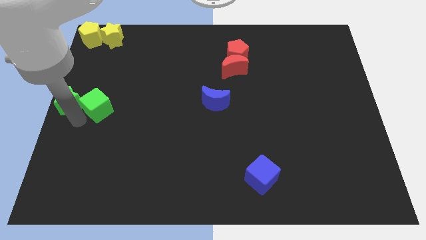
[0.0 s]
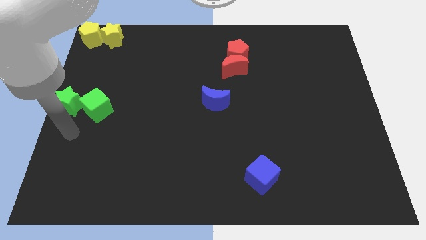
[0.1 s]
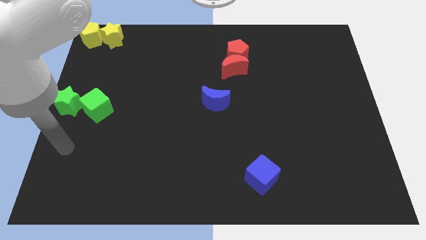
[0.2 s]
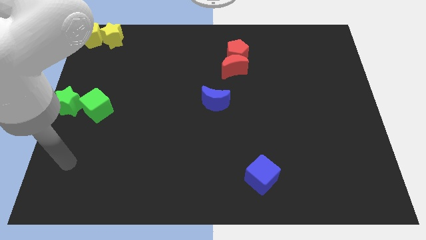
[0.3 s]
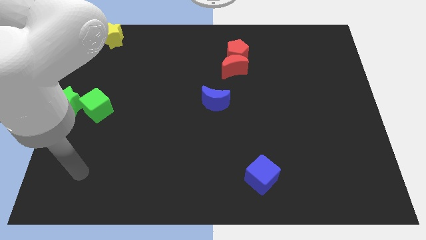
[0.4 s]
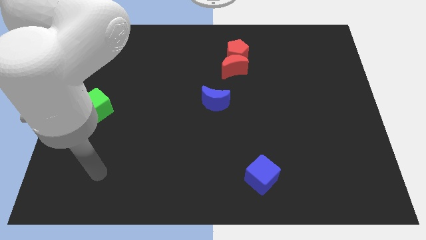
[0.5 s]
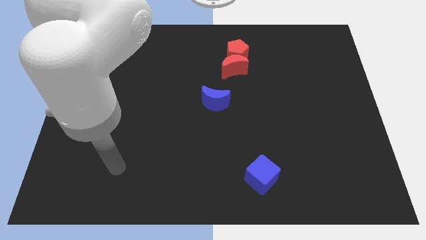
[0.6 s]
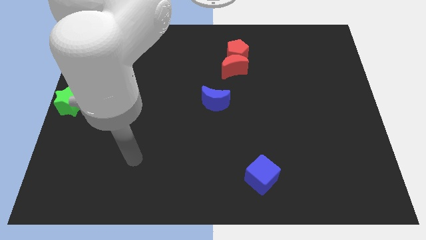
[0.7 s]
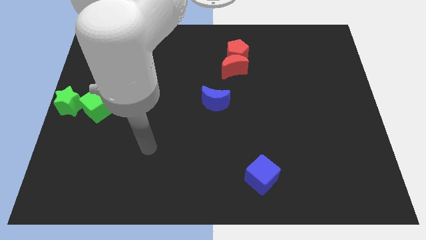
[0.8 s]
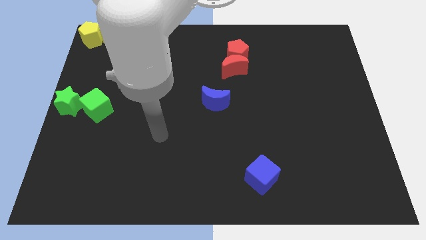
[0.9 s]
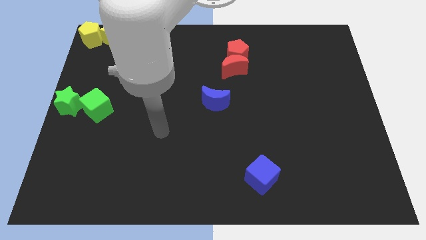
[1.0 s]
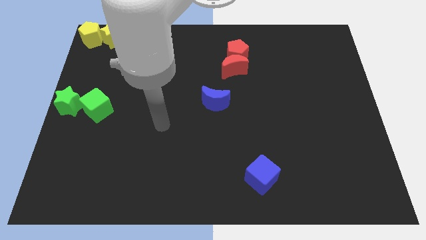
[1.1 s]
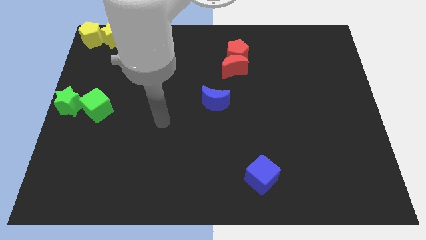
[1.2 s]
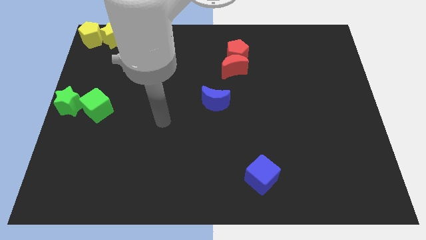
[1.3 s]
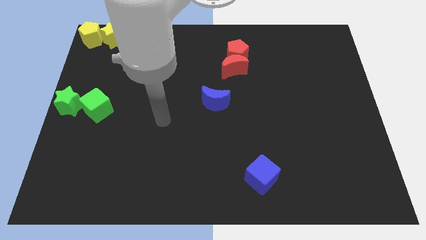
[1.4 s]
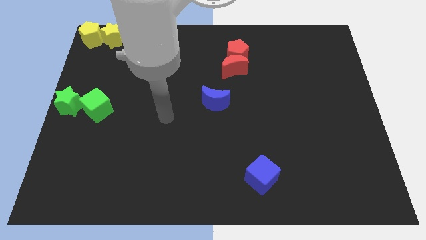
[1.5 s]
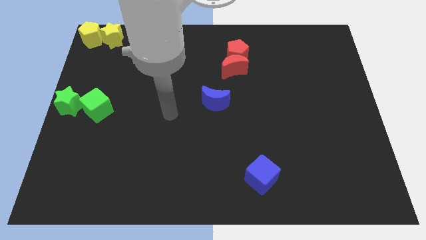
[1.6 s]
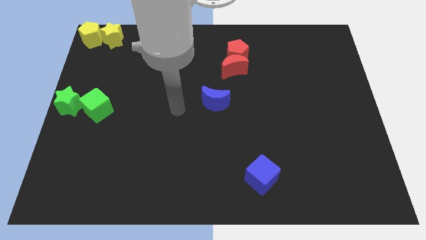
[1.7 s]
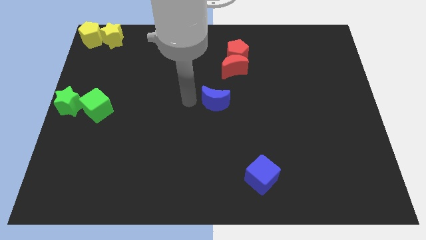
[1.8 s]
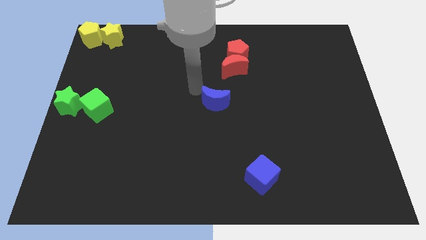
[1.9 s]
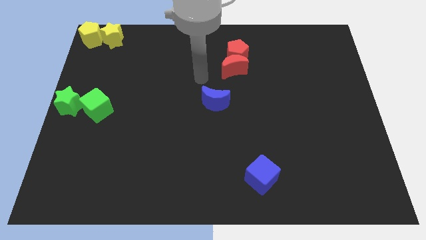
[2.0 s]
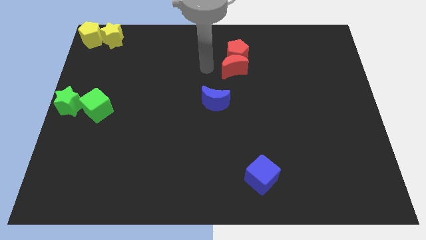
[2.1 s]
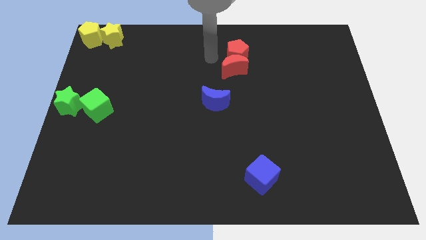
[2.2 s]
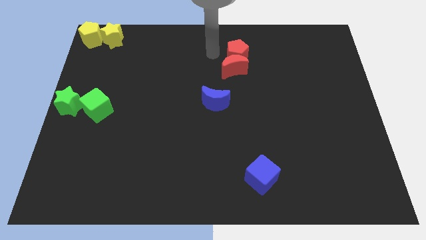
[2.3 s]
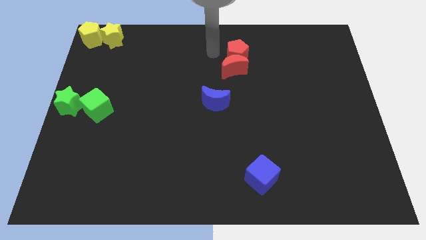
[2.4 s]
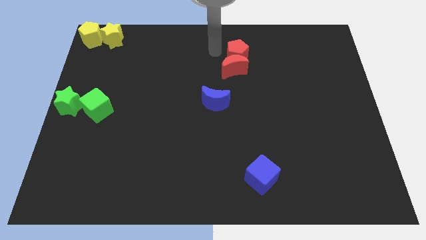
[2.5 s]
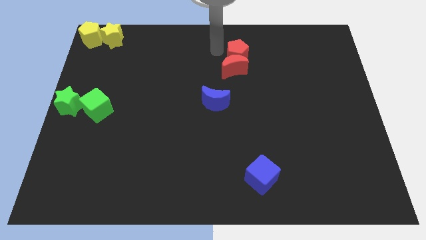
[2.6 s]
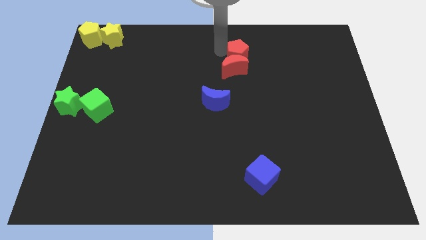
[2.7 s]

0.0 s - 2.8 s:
move your arm away from the green cube

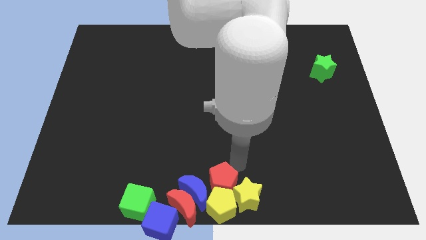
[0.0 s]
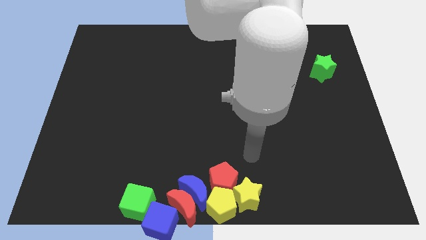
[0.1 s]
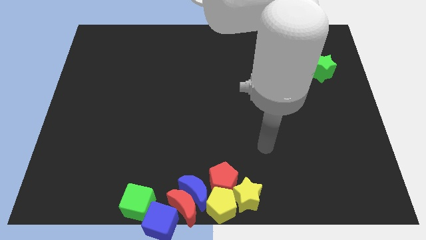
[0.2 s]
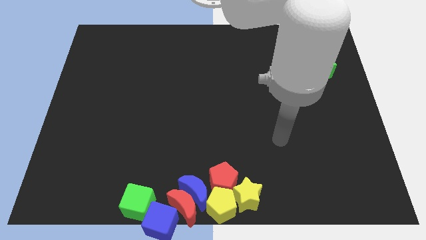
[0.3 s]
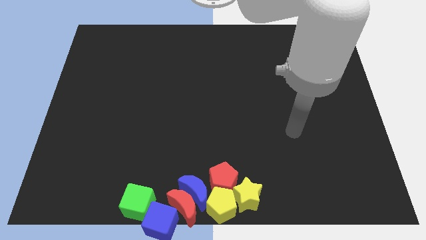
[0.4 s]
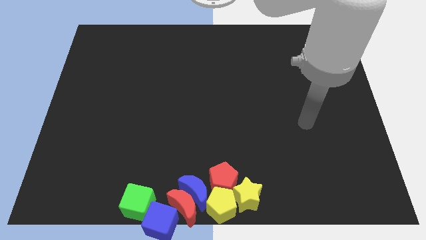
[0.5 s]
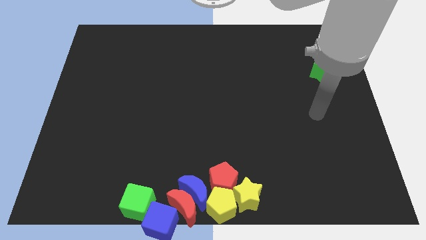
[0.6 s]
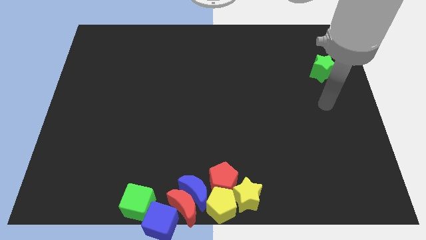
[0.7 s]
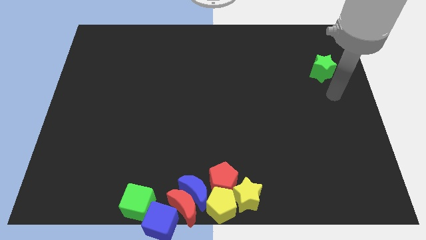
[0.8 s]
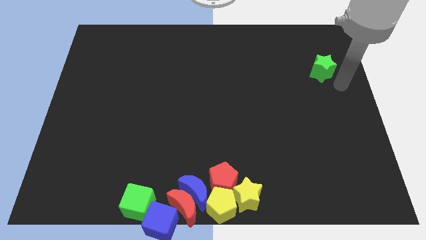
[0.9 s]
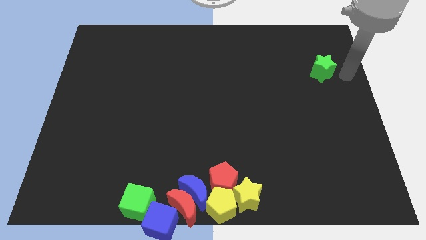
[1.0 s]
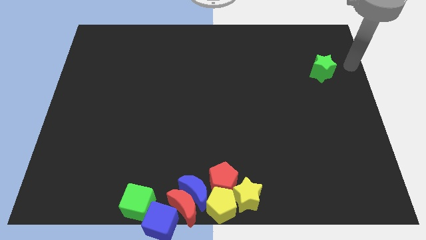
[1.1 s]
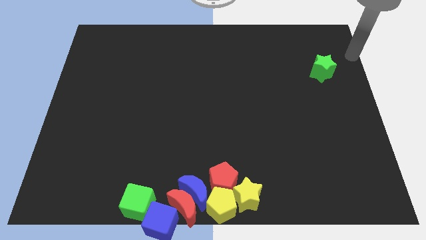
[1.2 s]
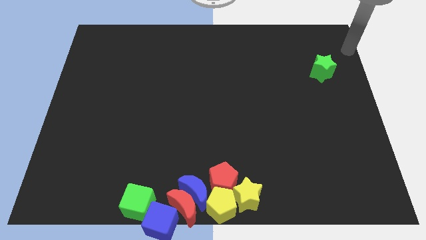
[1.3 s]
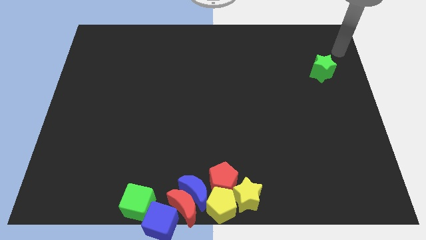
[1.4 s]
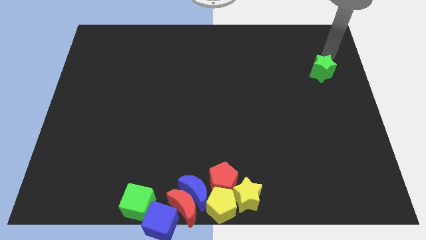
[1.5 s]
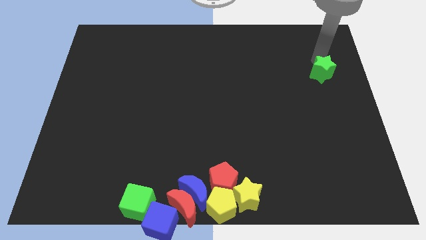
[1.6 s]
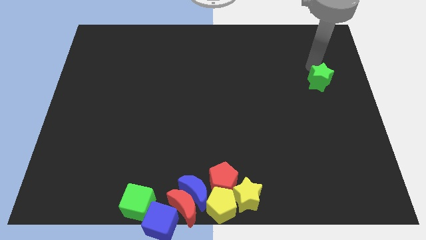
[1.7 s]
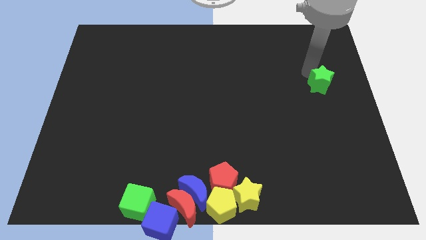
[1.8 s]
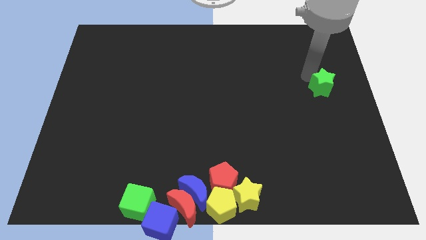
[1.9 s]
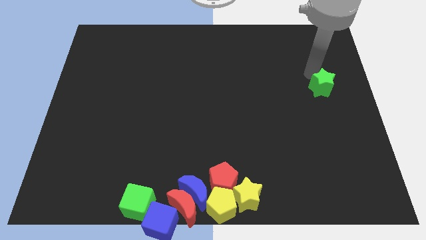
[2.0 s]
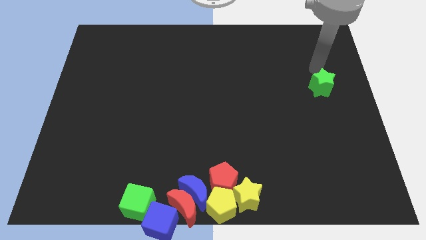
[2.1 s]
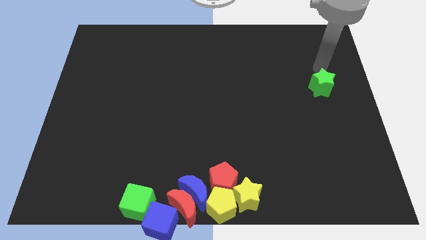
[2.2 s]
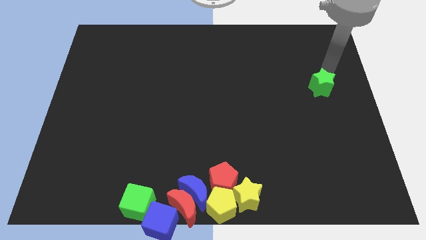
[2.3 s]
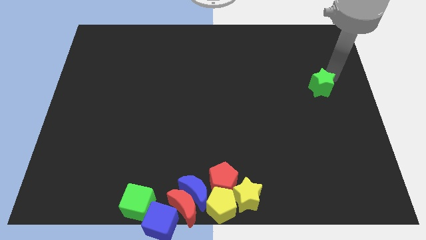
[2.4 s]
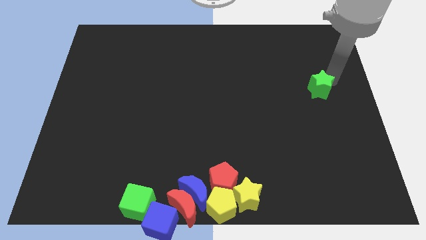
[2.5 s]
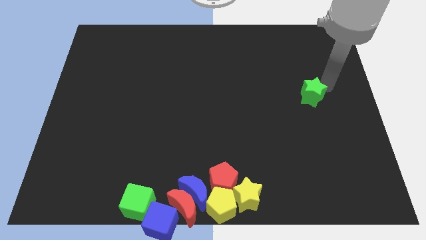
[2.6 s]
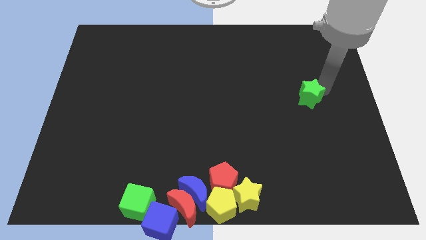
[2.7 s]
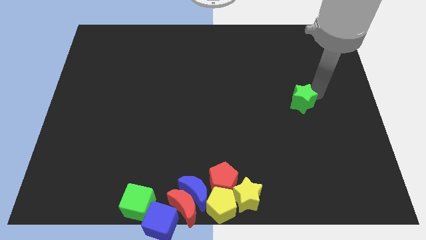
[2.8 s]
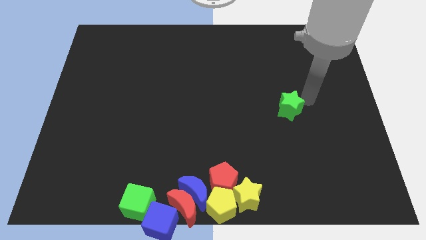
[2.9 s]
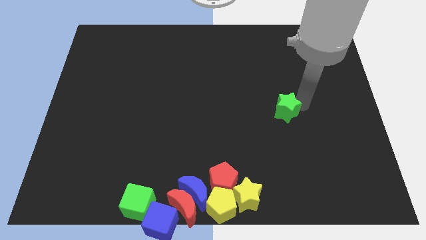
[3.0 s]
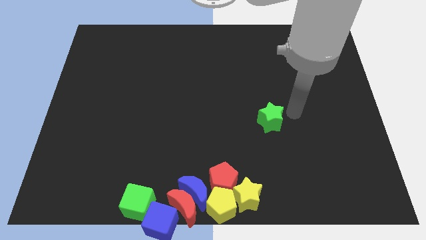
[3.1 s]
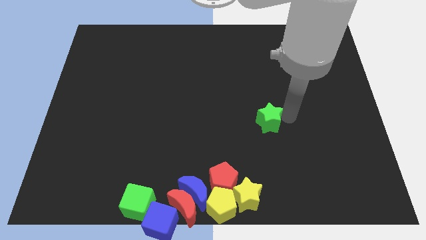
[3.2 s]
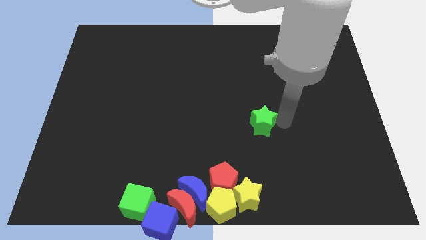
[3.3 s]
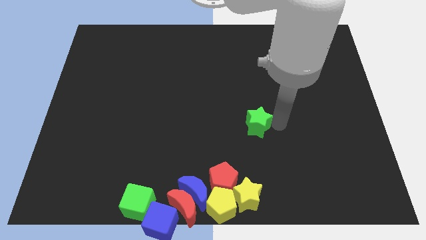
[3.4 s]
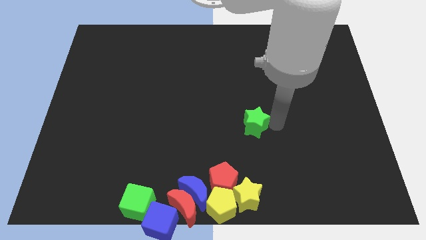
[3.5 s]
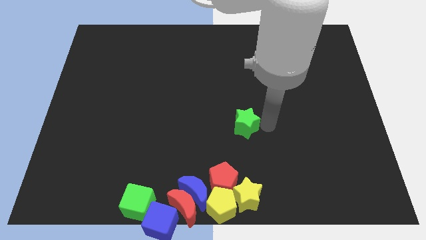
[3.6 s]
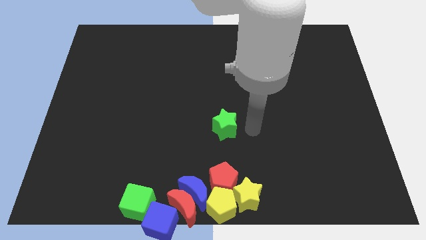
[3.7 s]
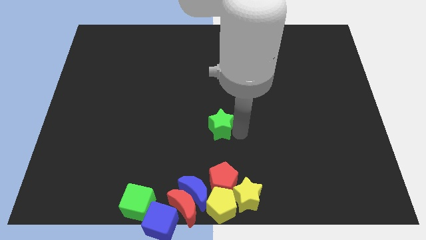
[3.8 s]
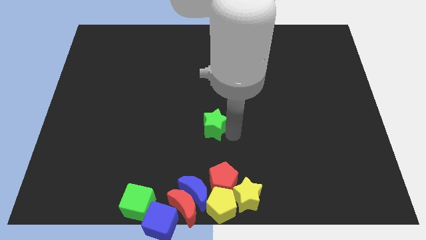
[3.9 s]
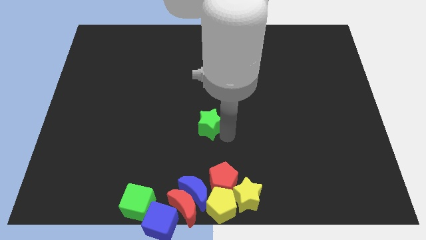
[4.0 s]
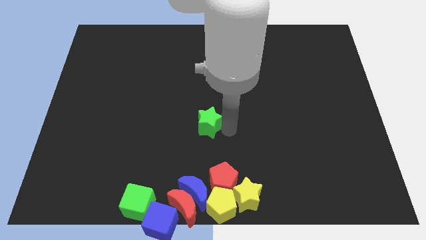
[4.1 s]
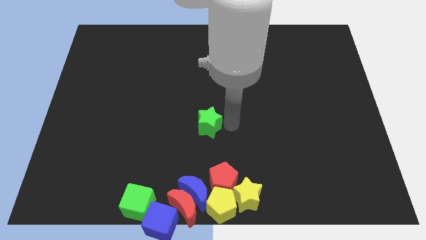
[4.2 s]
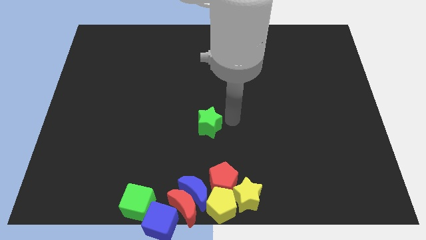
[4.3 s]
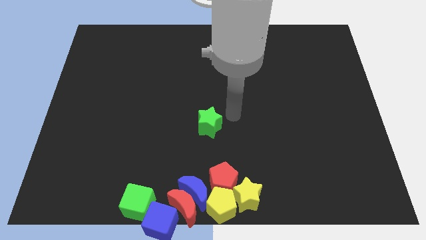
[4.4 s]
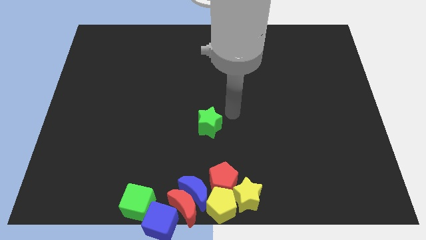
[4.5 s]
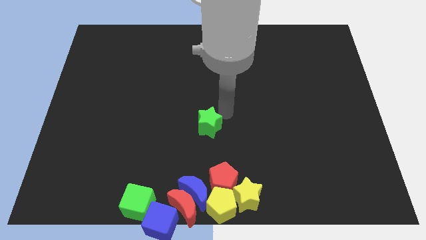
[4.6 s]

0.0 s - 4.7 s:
move the green star to the top side of the group of blocks

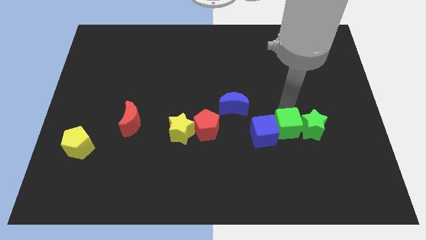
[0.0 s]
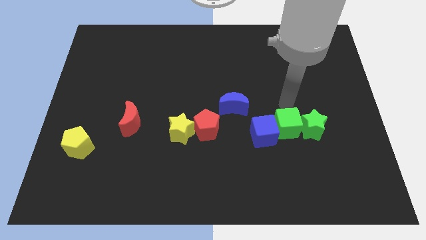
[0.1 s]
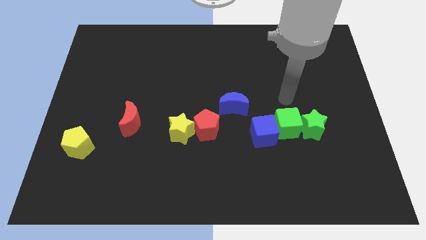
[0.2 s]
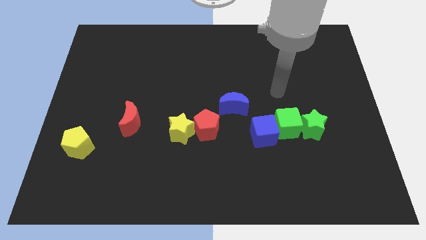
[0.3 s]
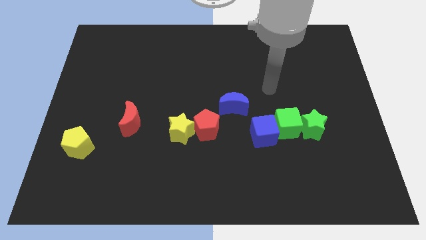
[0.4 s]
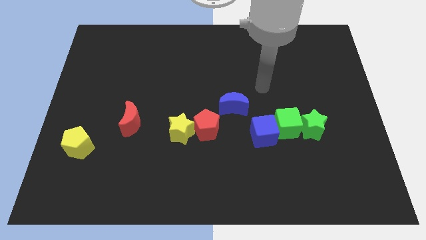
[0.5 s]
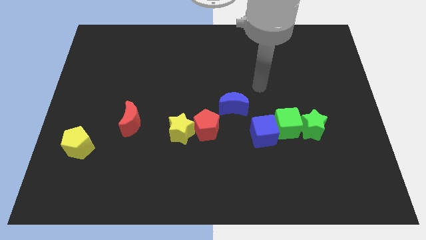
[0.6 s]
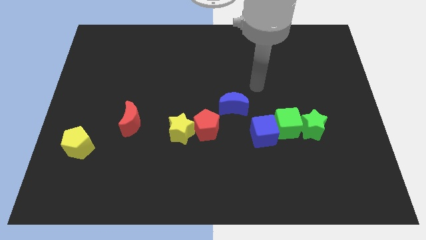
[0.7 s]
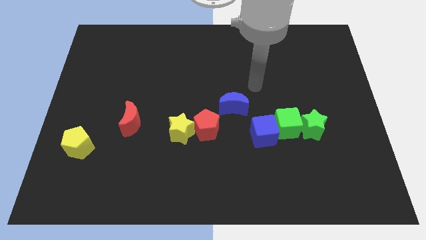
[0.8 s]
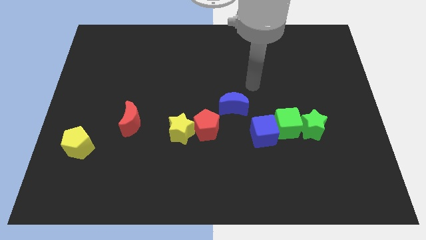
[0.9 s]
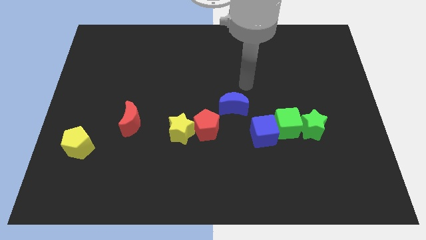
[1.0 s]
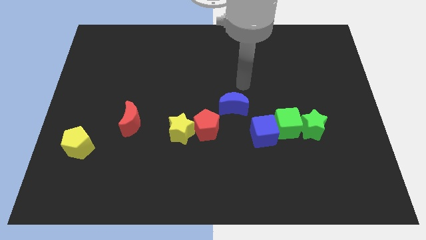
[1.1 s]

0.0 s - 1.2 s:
move the arm away from the green cube

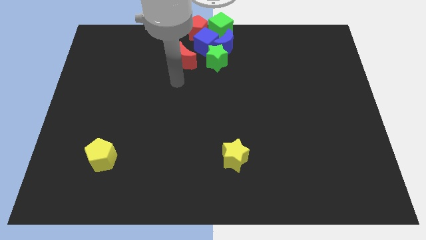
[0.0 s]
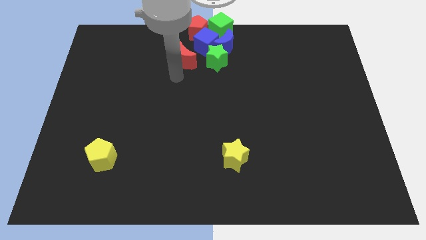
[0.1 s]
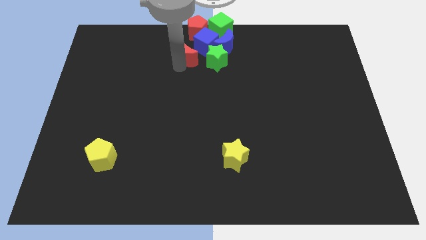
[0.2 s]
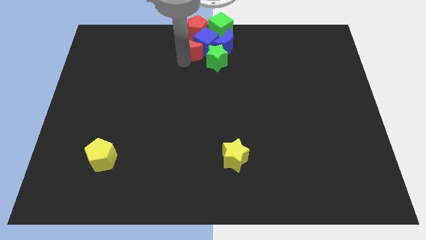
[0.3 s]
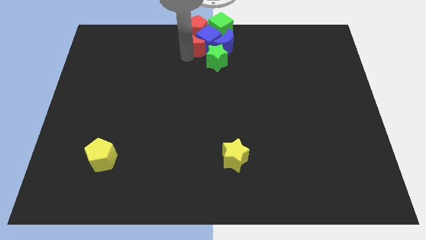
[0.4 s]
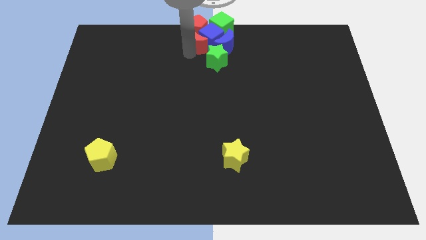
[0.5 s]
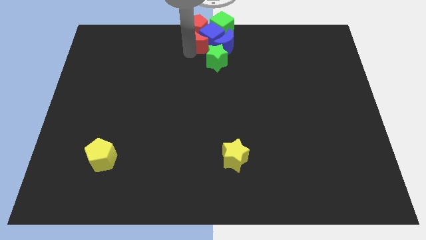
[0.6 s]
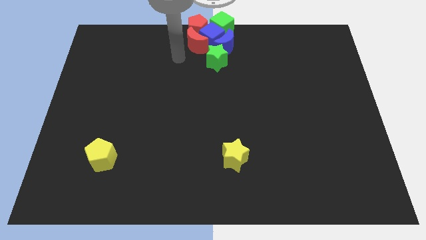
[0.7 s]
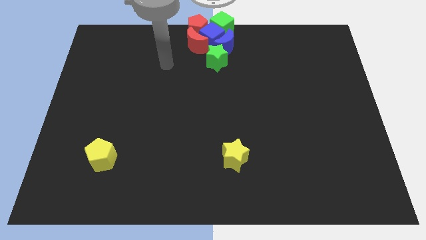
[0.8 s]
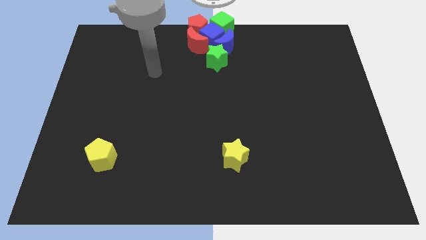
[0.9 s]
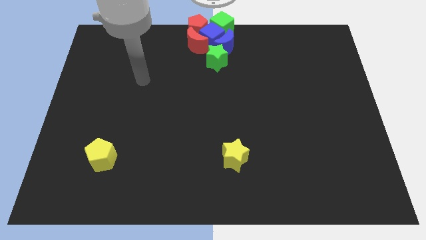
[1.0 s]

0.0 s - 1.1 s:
push the red crescent into the blue cube
